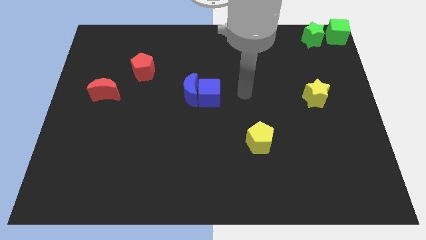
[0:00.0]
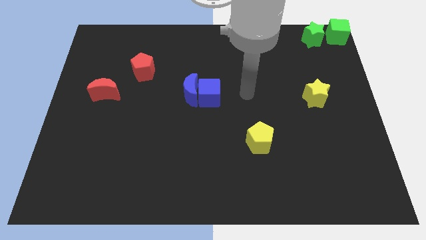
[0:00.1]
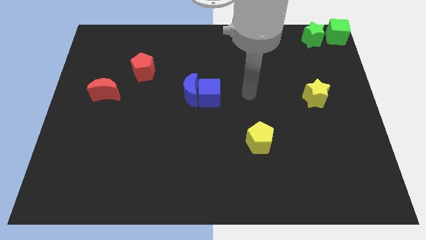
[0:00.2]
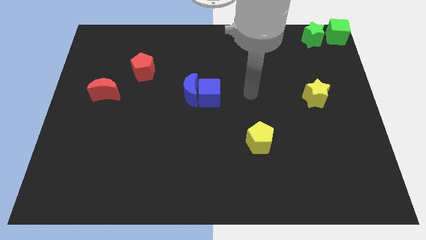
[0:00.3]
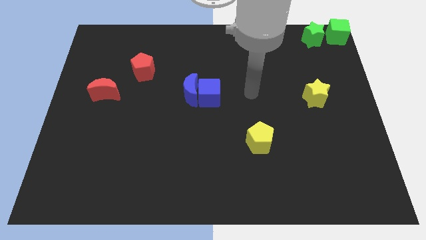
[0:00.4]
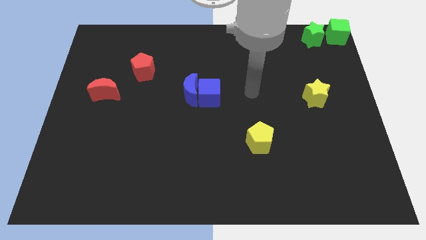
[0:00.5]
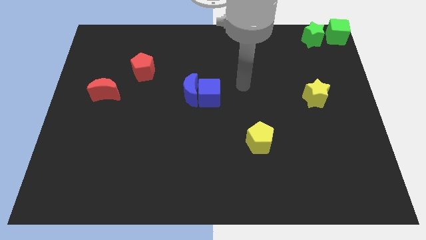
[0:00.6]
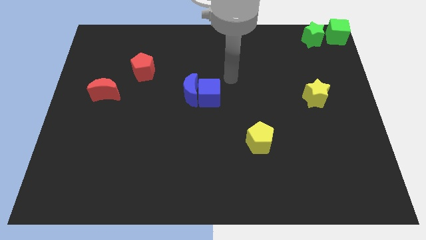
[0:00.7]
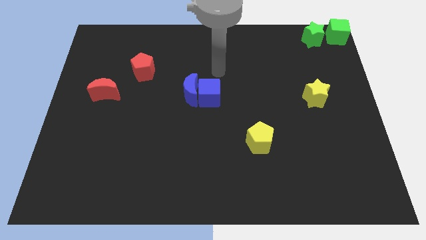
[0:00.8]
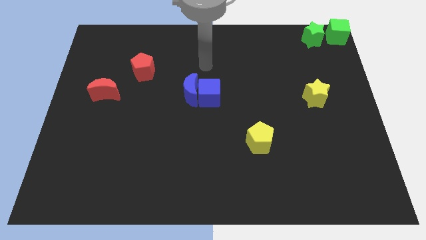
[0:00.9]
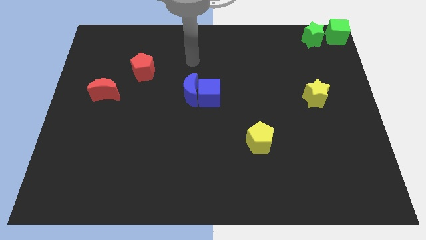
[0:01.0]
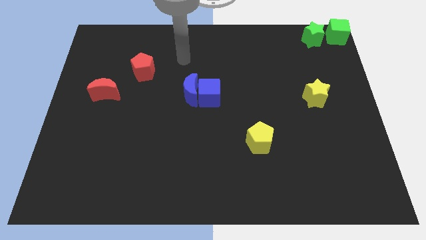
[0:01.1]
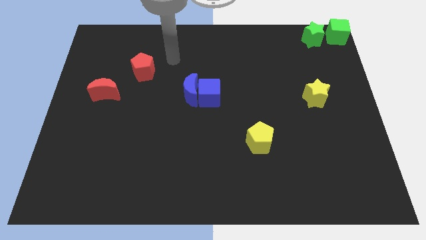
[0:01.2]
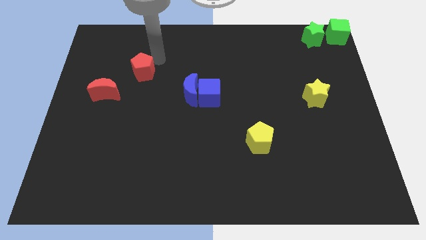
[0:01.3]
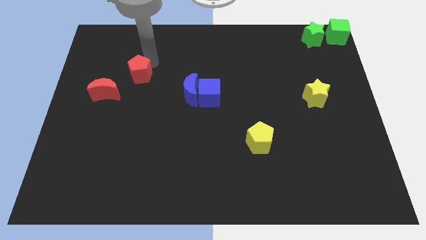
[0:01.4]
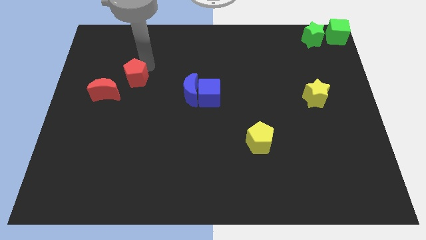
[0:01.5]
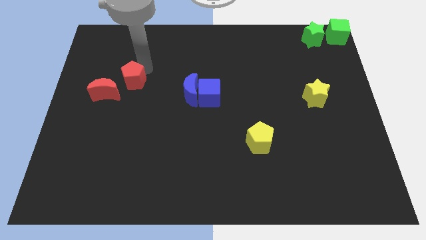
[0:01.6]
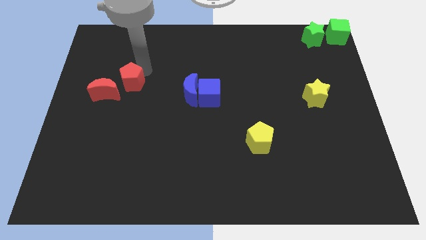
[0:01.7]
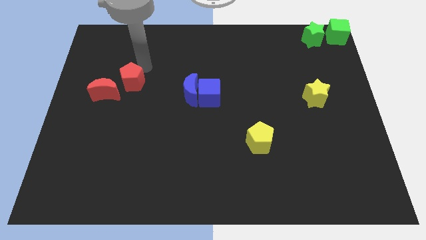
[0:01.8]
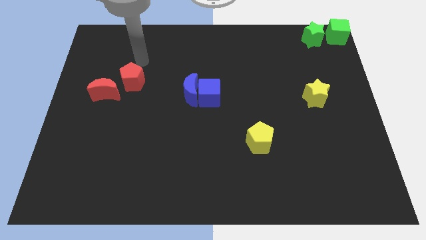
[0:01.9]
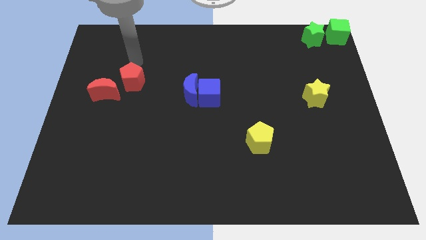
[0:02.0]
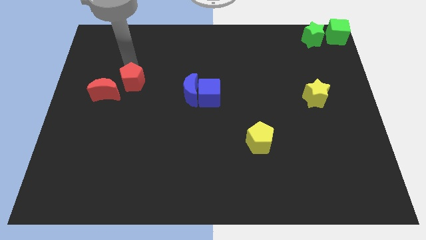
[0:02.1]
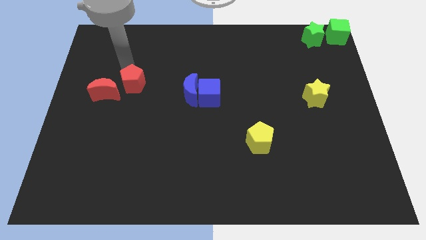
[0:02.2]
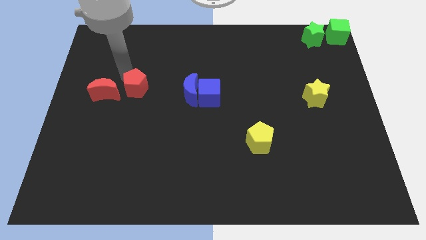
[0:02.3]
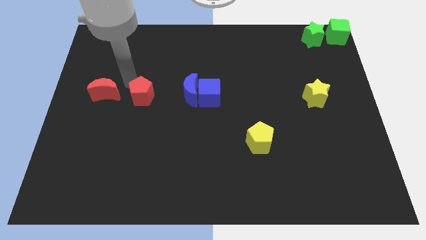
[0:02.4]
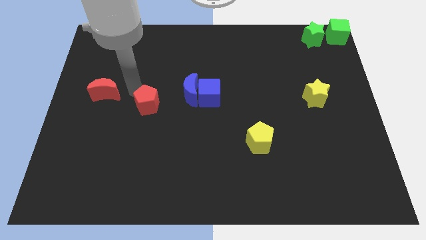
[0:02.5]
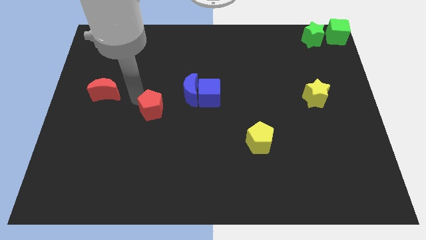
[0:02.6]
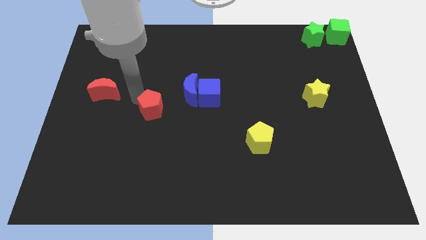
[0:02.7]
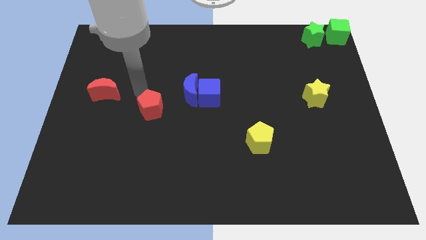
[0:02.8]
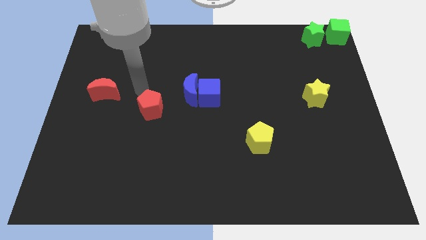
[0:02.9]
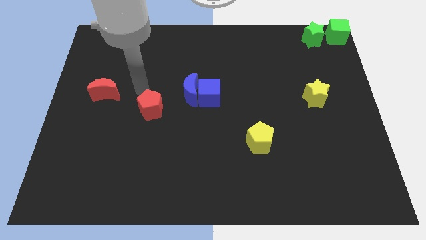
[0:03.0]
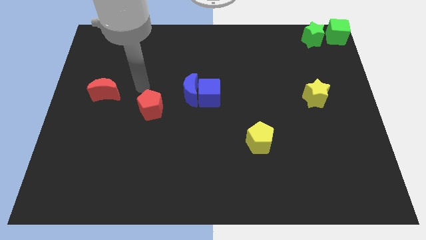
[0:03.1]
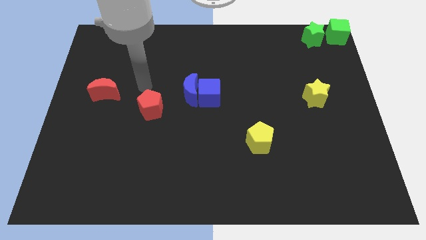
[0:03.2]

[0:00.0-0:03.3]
move the red pentagon diagonal to the yellow pentagon

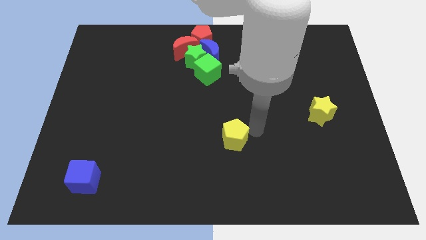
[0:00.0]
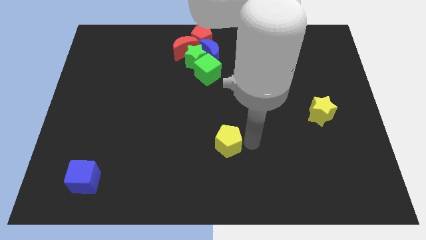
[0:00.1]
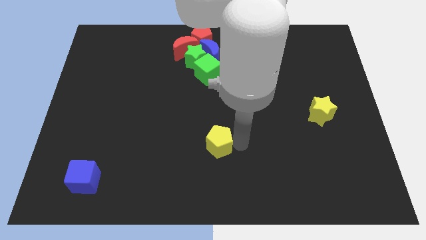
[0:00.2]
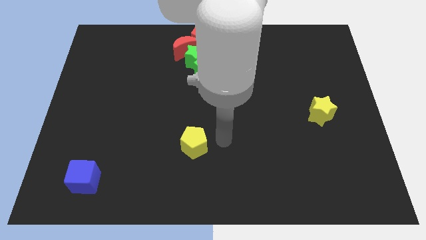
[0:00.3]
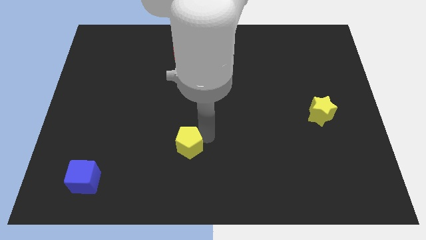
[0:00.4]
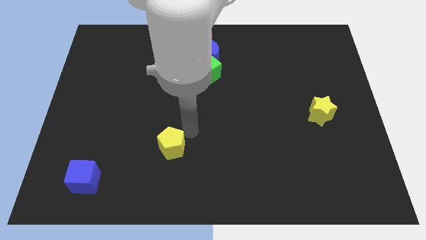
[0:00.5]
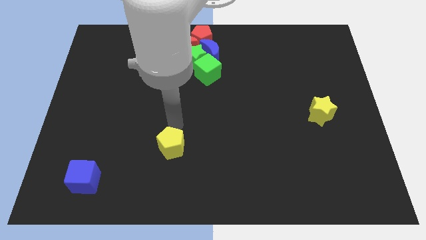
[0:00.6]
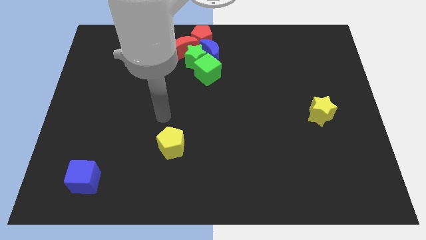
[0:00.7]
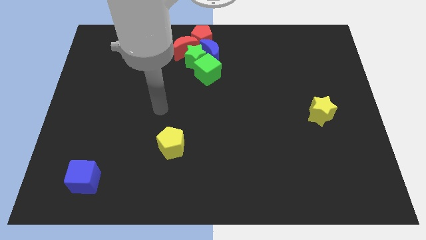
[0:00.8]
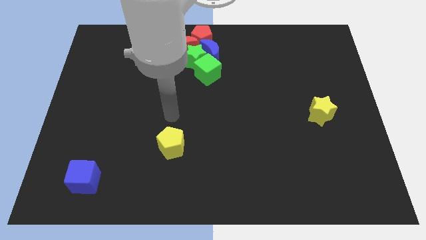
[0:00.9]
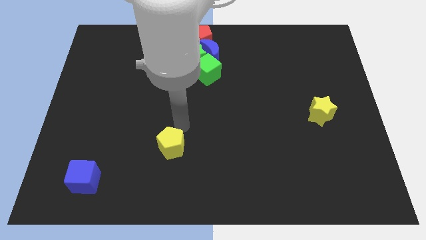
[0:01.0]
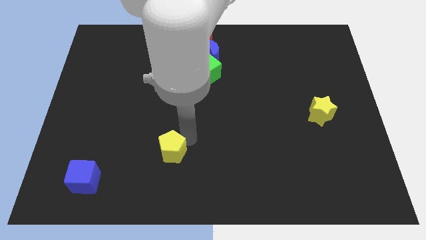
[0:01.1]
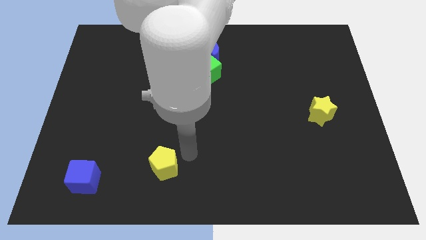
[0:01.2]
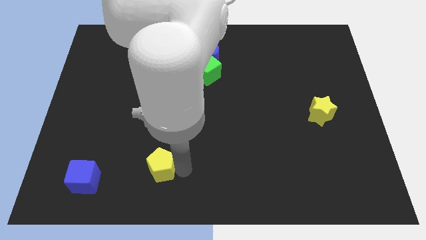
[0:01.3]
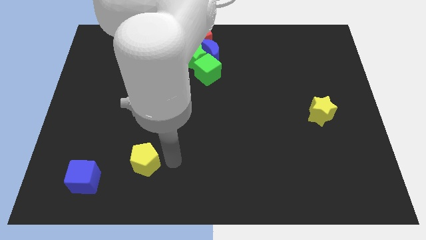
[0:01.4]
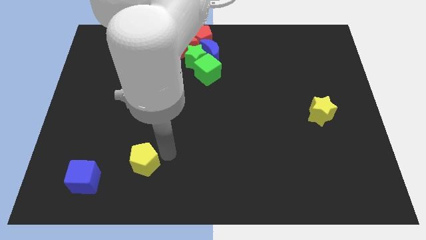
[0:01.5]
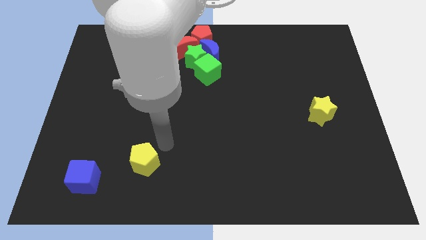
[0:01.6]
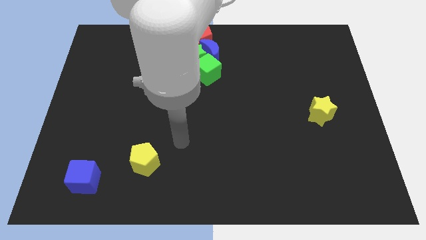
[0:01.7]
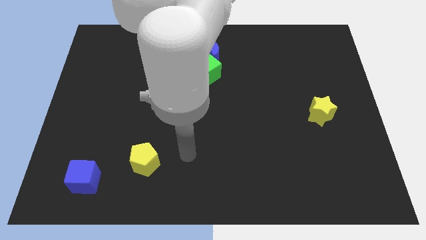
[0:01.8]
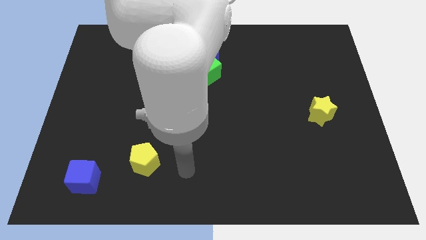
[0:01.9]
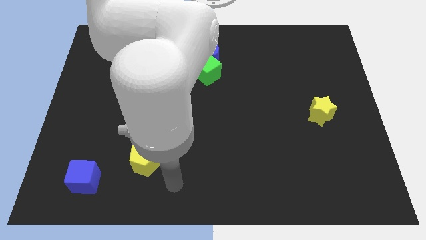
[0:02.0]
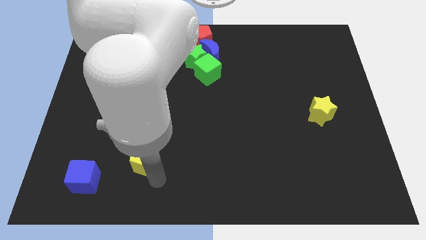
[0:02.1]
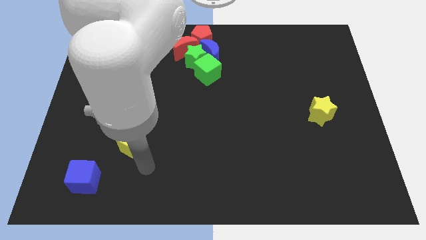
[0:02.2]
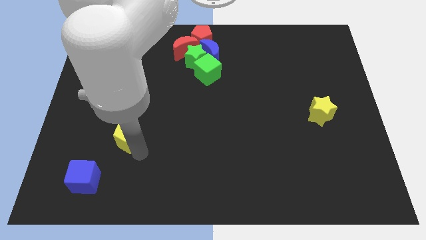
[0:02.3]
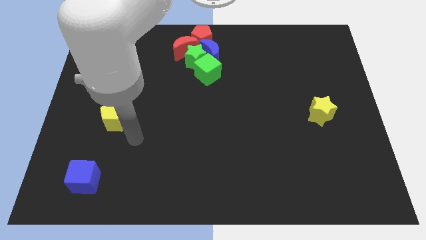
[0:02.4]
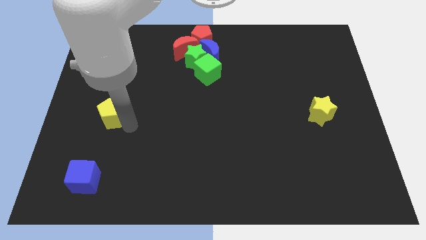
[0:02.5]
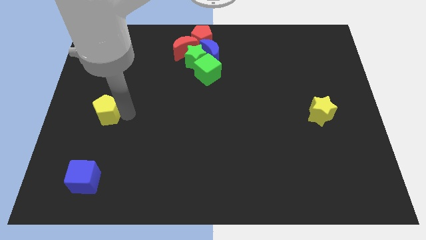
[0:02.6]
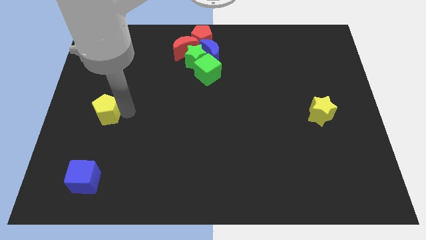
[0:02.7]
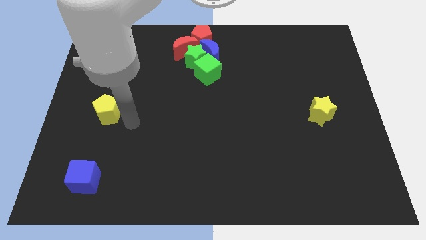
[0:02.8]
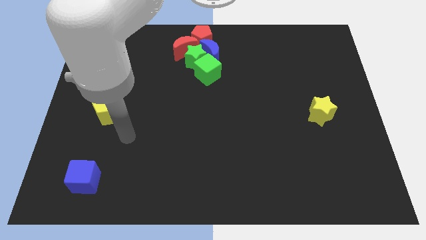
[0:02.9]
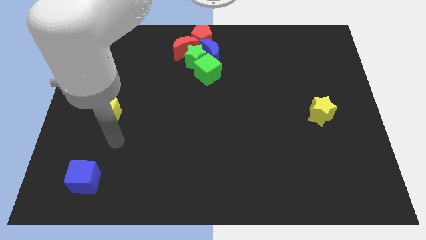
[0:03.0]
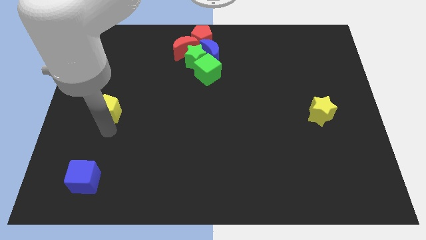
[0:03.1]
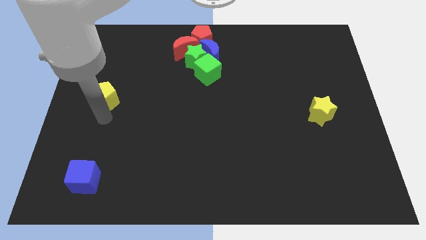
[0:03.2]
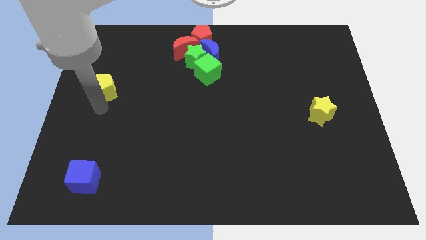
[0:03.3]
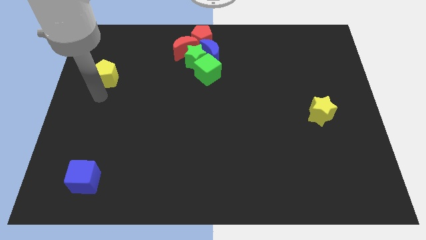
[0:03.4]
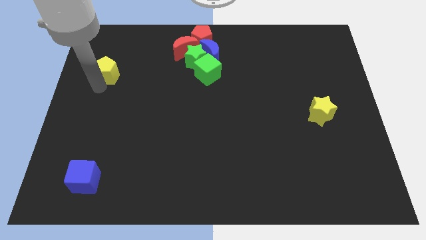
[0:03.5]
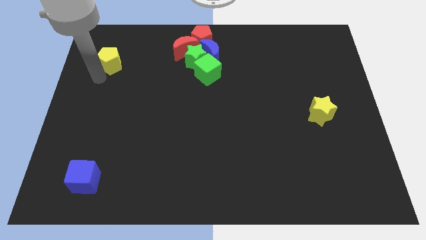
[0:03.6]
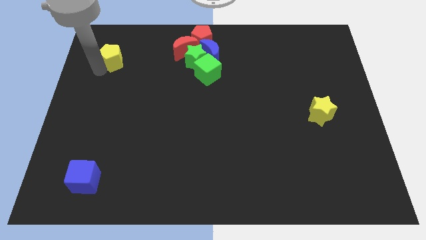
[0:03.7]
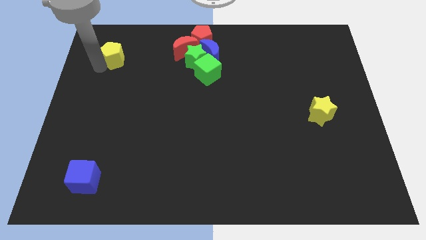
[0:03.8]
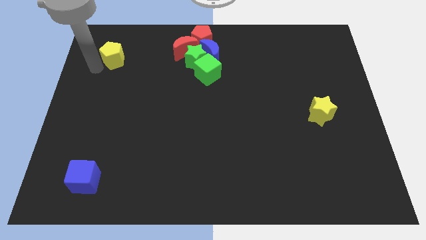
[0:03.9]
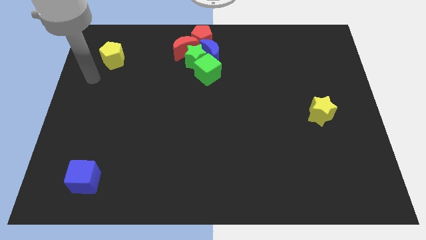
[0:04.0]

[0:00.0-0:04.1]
push yellow pentagon to the left of green star

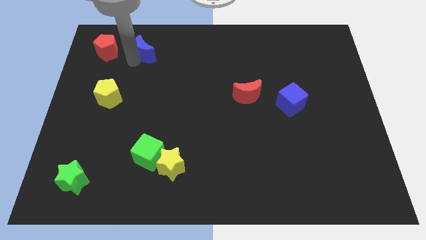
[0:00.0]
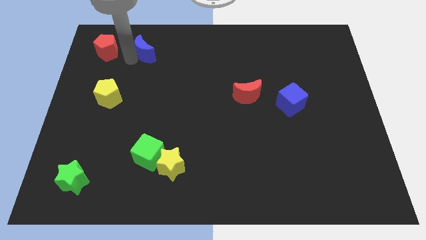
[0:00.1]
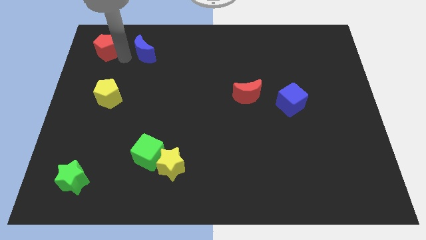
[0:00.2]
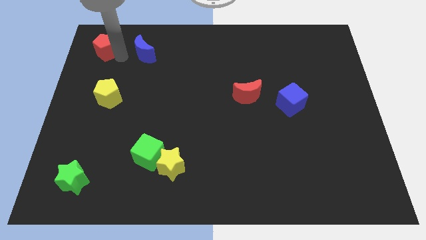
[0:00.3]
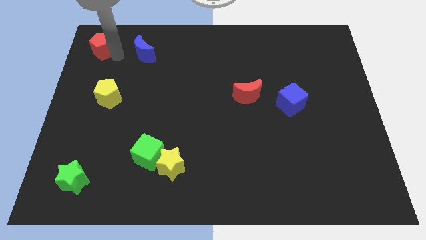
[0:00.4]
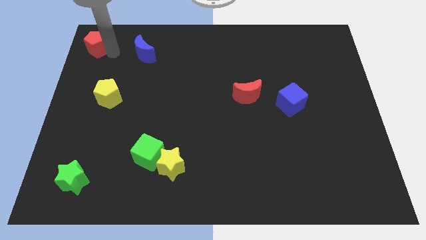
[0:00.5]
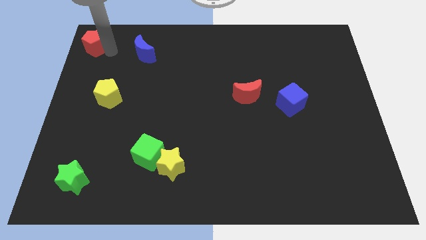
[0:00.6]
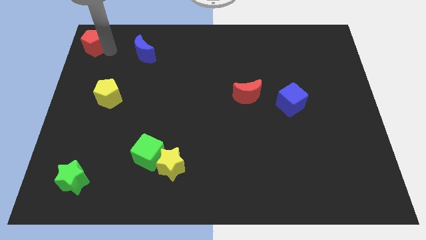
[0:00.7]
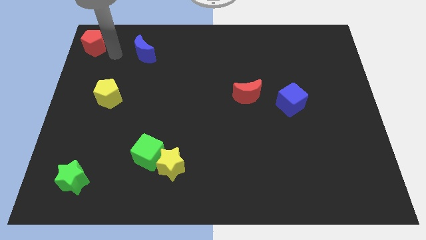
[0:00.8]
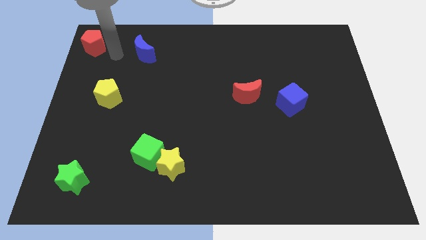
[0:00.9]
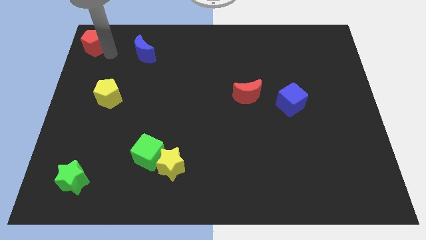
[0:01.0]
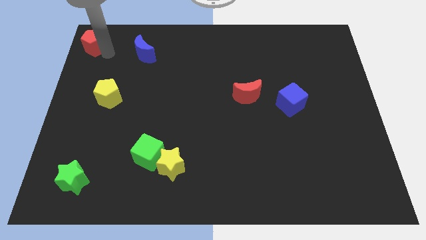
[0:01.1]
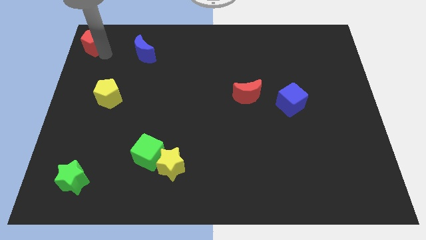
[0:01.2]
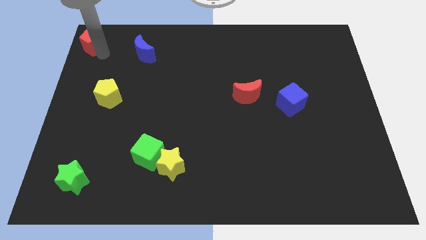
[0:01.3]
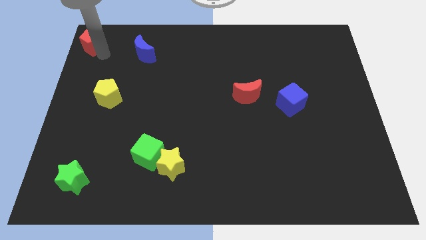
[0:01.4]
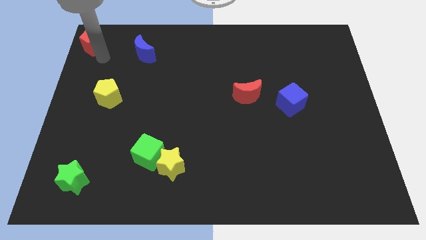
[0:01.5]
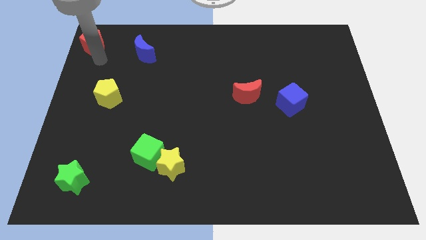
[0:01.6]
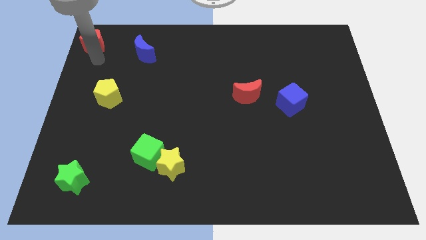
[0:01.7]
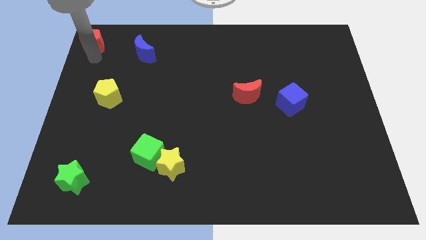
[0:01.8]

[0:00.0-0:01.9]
move the red pentagon to the top left corner
